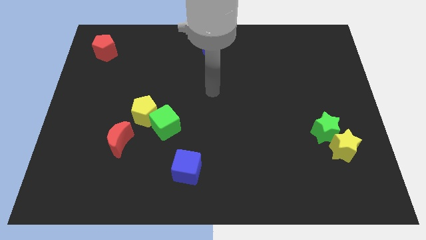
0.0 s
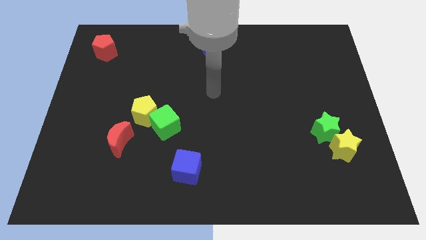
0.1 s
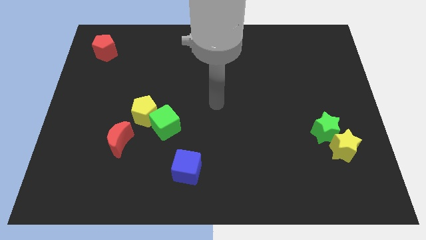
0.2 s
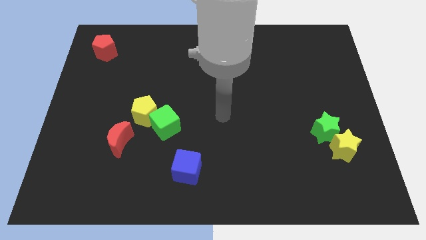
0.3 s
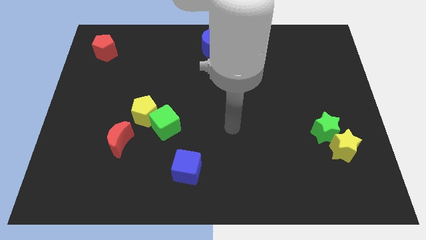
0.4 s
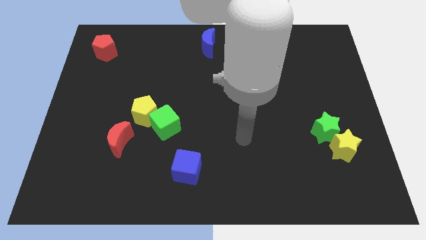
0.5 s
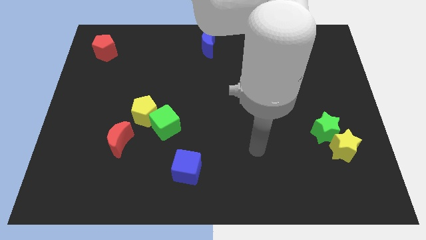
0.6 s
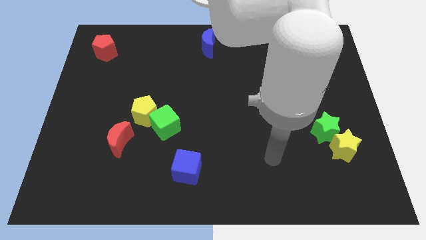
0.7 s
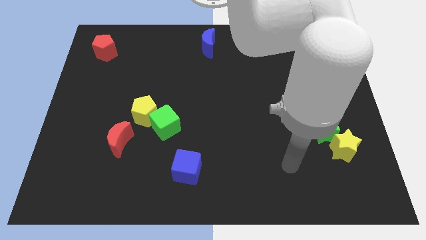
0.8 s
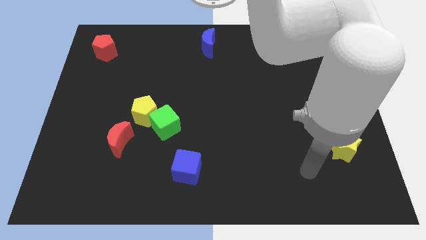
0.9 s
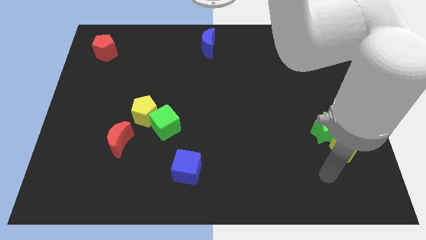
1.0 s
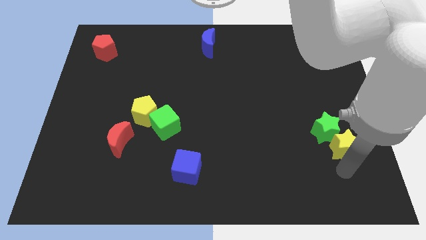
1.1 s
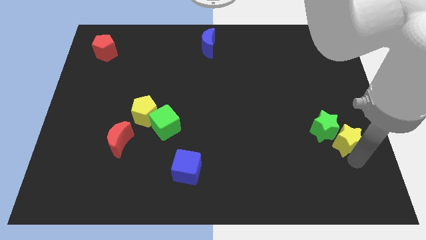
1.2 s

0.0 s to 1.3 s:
move your arm towards the yellow star

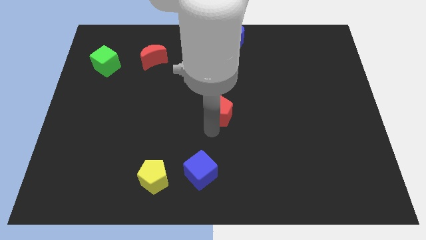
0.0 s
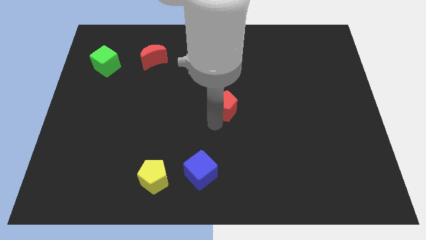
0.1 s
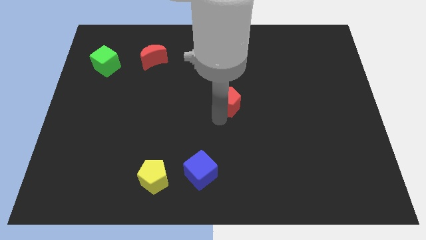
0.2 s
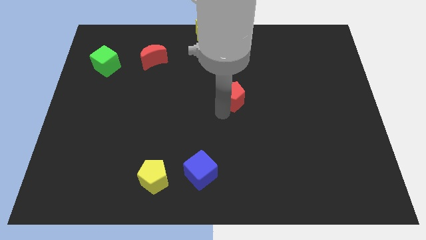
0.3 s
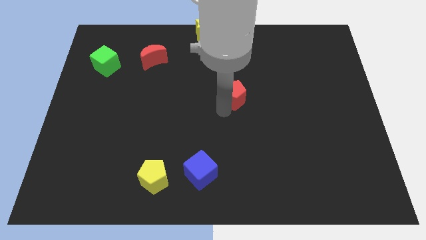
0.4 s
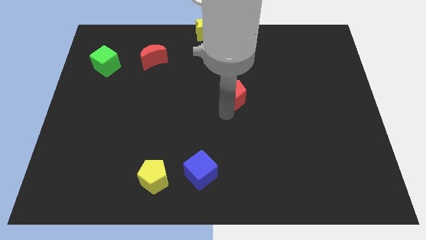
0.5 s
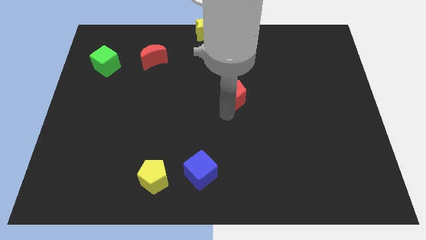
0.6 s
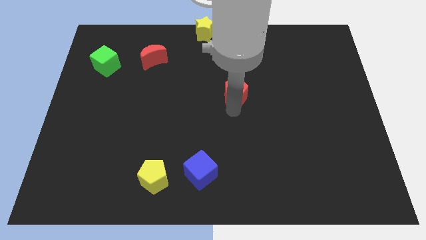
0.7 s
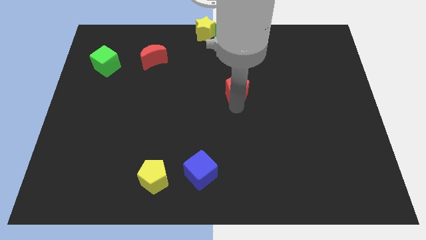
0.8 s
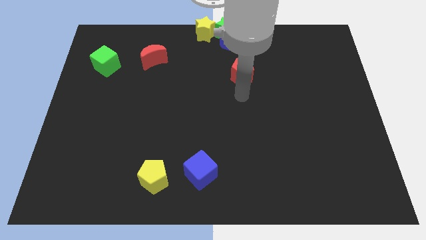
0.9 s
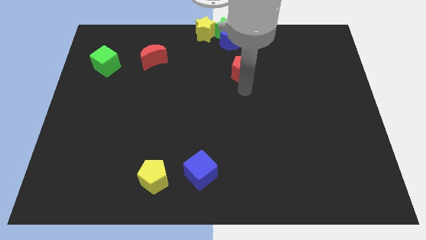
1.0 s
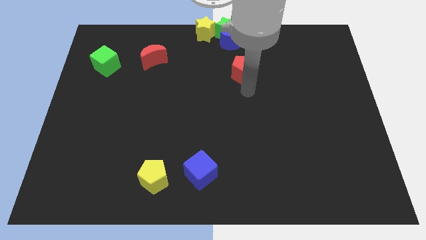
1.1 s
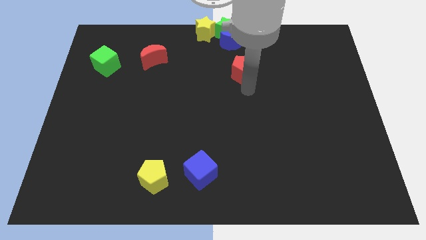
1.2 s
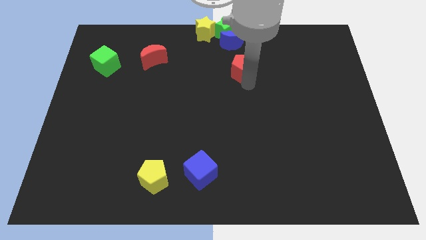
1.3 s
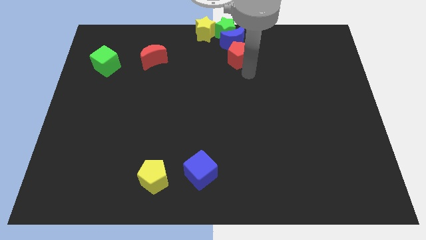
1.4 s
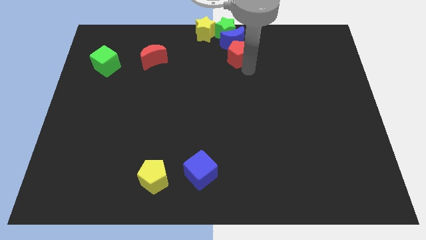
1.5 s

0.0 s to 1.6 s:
move the red pentagon towards top center of the board

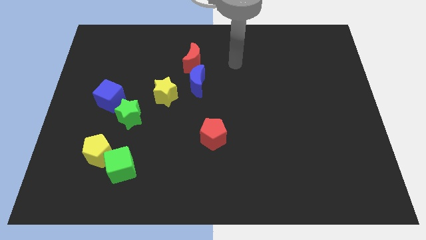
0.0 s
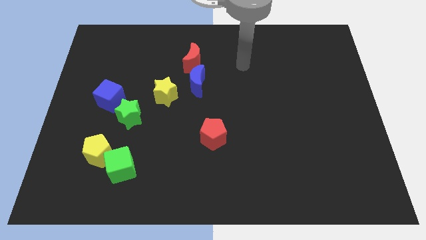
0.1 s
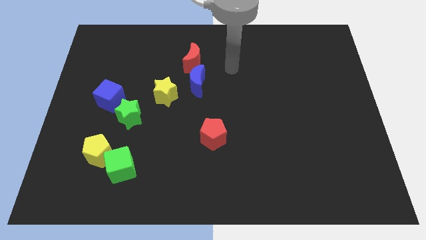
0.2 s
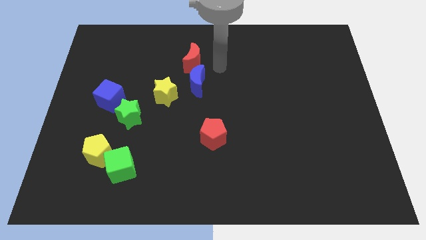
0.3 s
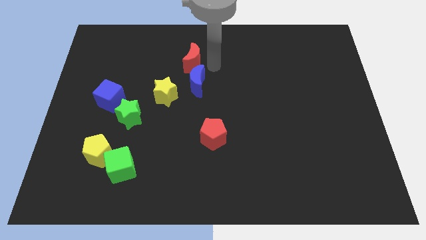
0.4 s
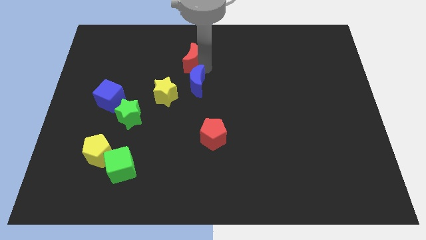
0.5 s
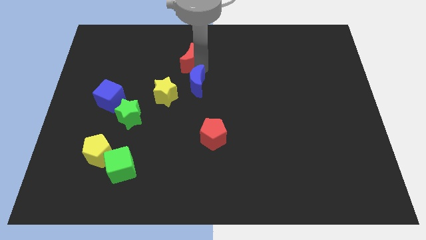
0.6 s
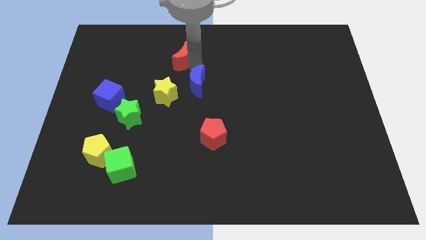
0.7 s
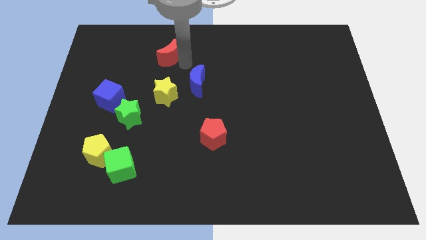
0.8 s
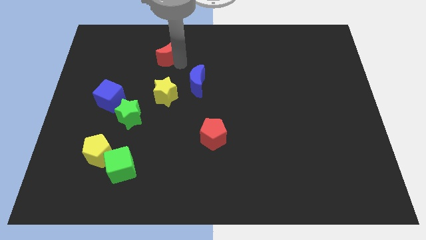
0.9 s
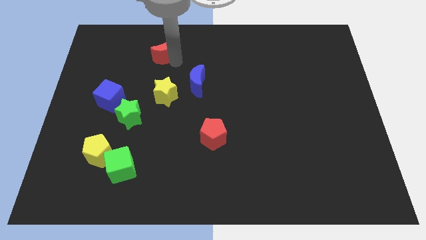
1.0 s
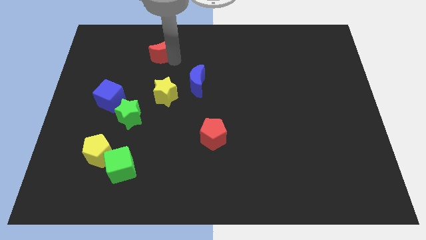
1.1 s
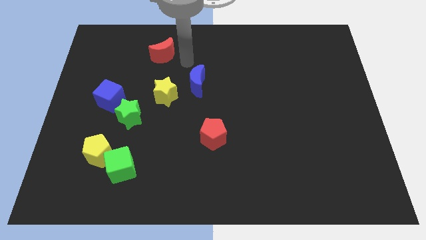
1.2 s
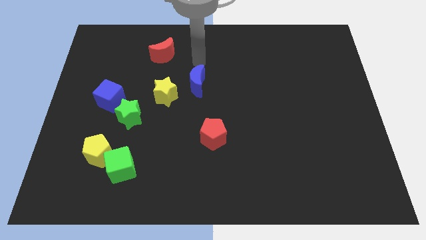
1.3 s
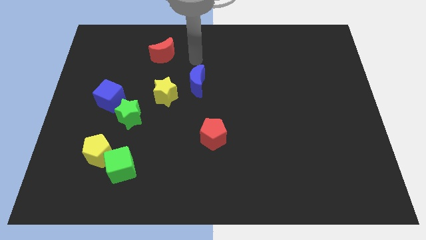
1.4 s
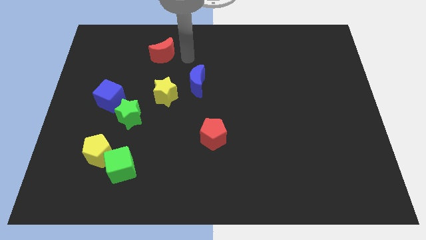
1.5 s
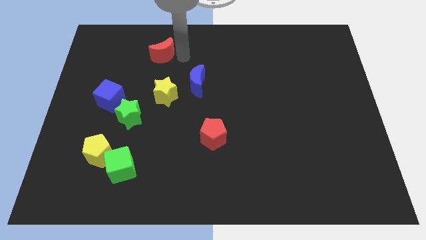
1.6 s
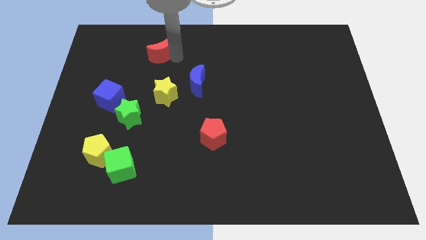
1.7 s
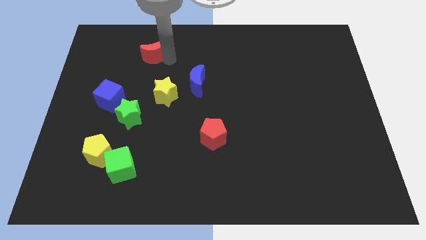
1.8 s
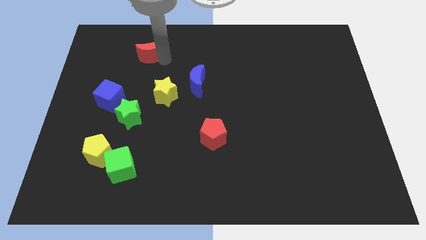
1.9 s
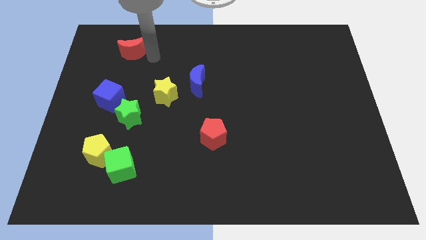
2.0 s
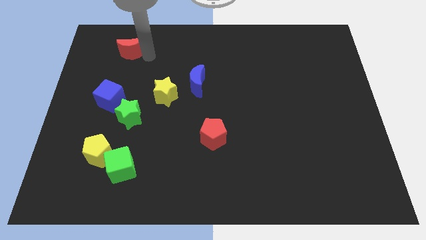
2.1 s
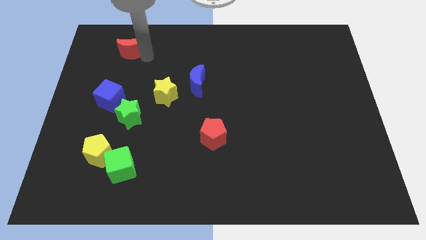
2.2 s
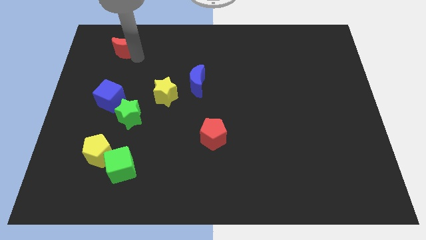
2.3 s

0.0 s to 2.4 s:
move the red crescent towards the top left of the board

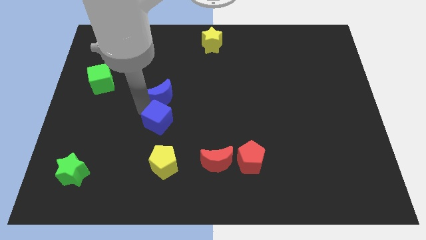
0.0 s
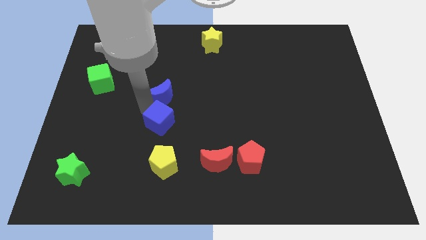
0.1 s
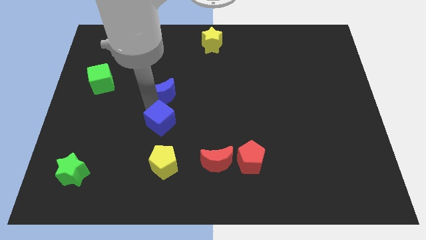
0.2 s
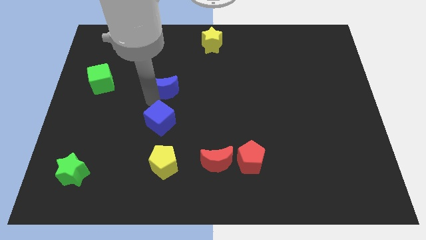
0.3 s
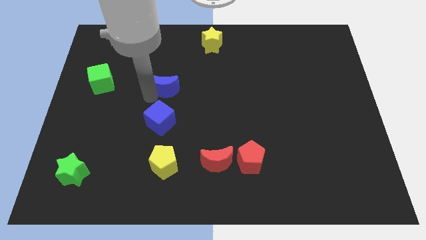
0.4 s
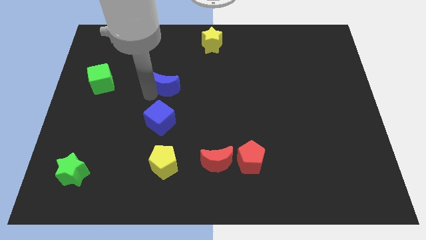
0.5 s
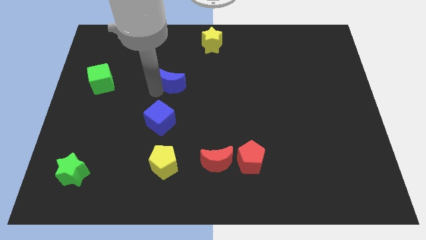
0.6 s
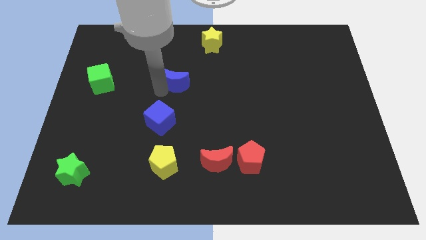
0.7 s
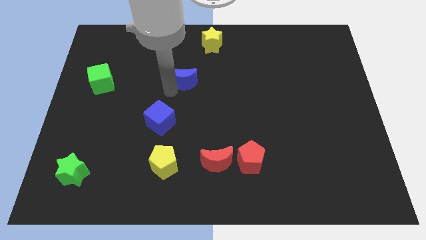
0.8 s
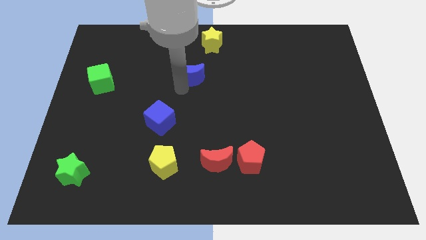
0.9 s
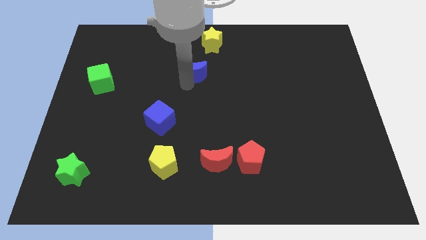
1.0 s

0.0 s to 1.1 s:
separate the blue crescent from the blue cube

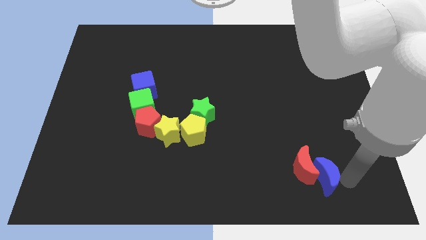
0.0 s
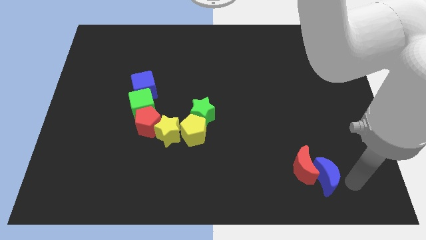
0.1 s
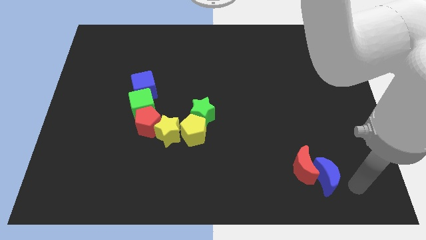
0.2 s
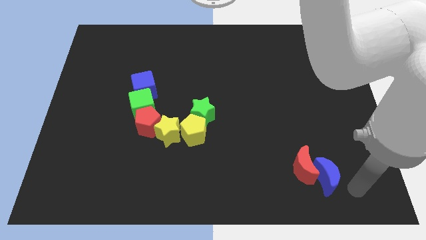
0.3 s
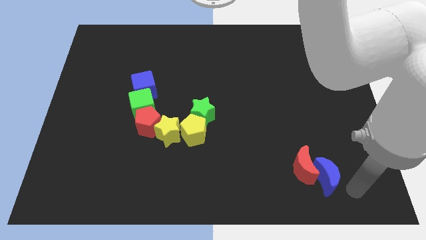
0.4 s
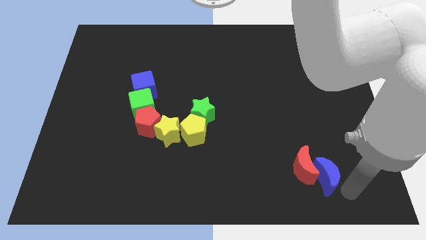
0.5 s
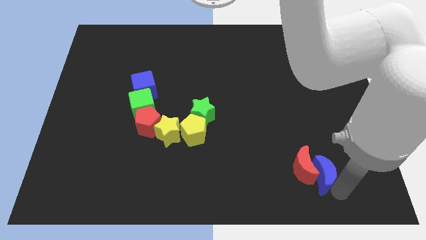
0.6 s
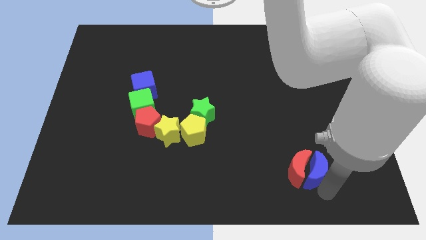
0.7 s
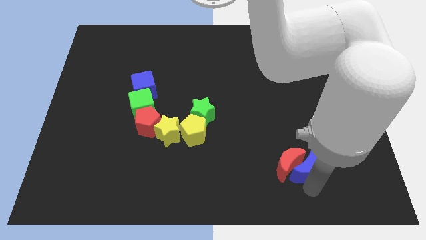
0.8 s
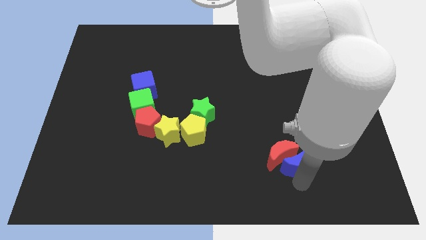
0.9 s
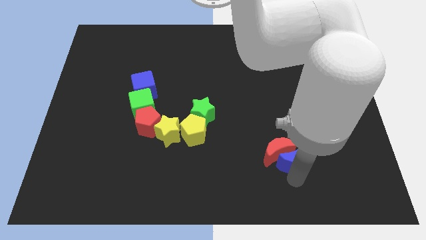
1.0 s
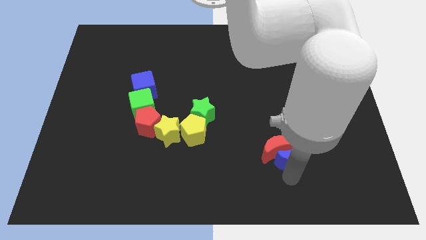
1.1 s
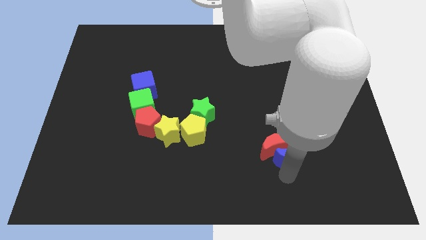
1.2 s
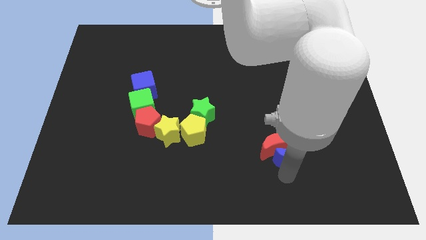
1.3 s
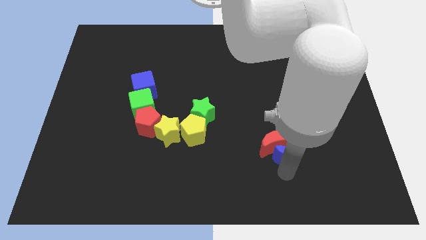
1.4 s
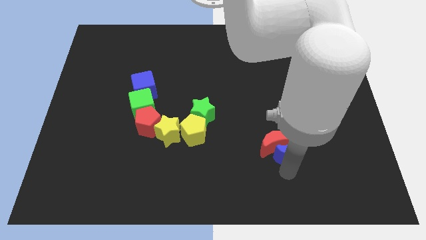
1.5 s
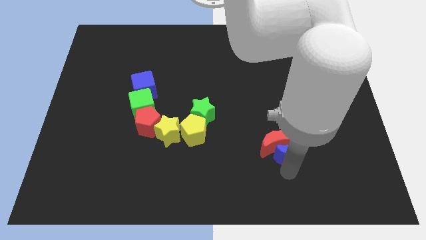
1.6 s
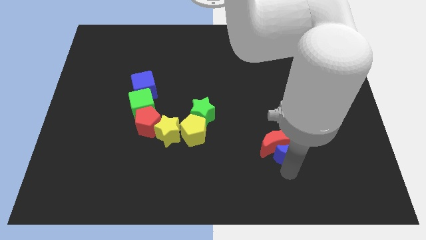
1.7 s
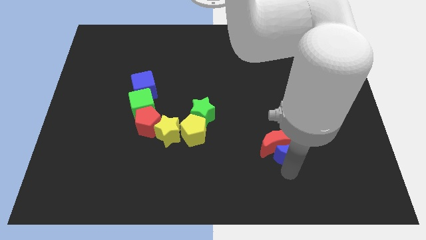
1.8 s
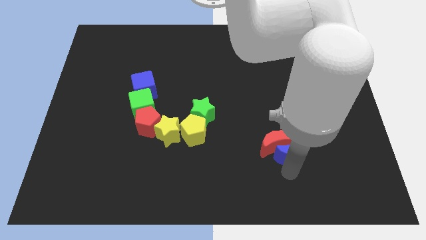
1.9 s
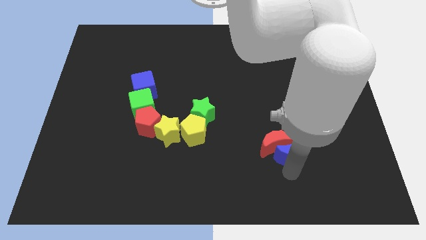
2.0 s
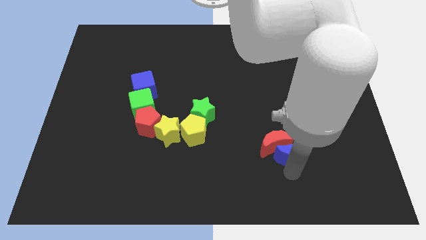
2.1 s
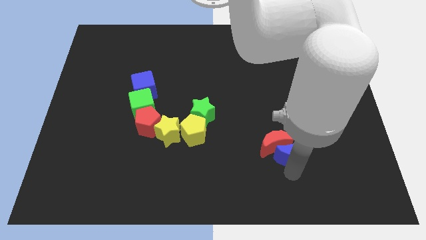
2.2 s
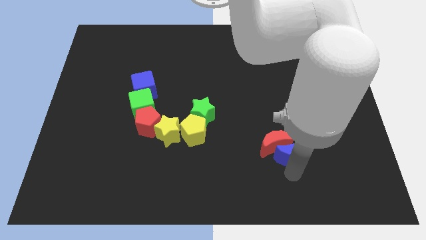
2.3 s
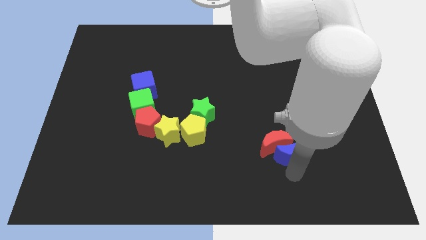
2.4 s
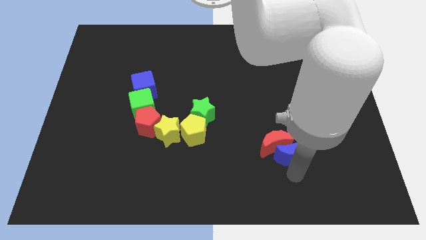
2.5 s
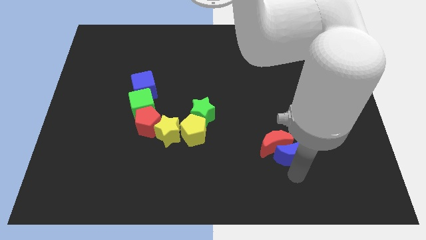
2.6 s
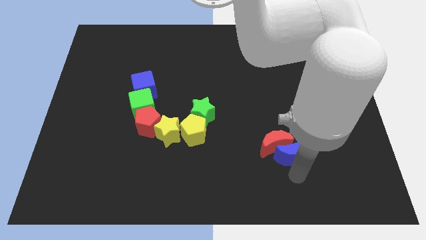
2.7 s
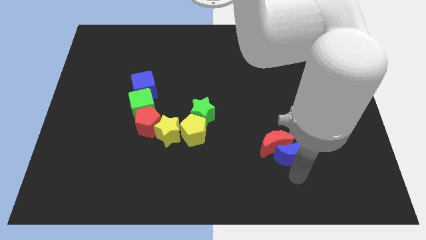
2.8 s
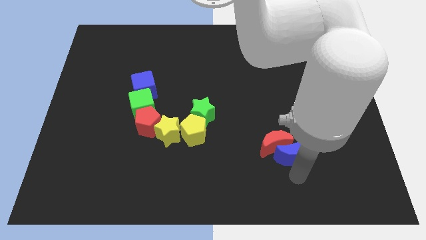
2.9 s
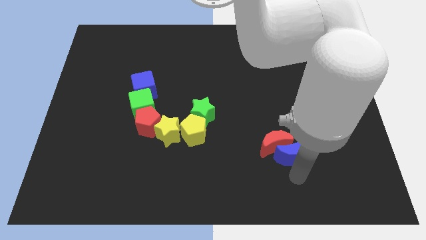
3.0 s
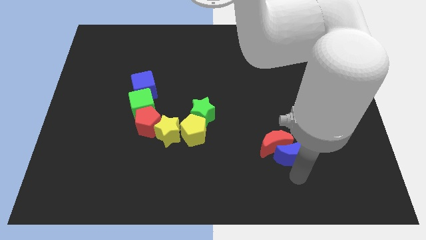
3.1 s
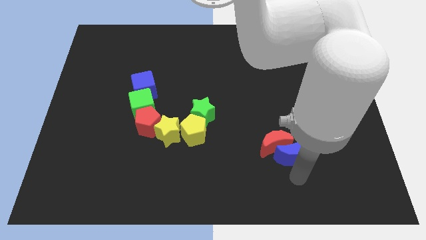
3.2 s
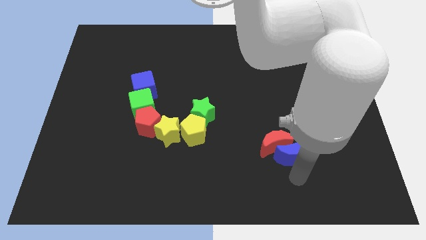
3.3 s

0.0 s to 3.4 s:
move the blue crescent into the red crescent
